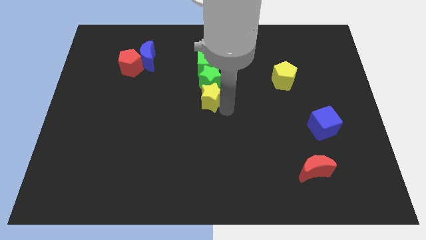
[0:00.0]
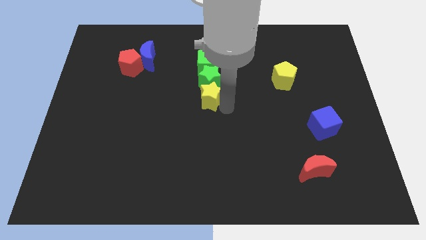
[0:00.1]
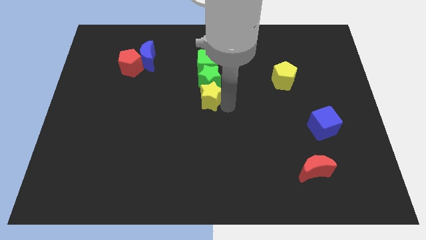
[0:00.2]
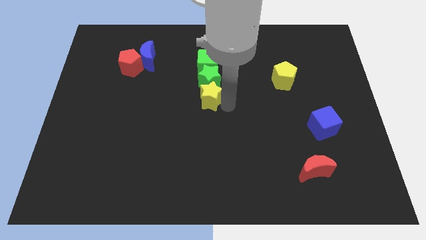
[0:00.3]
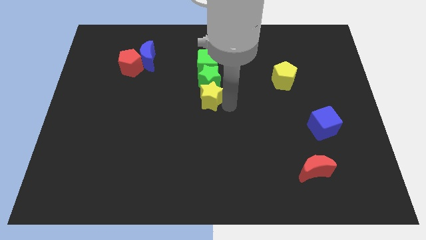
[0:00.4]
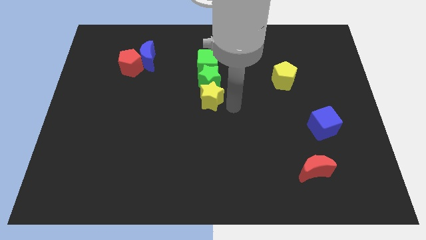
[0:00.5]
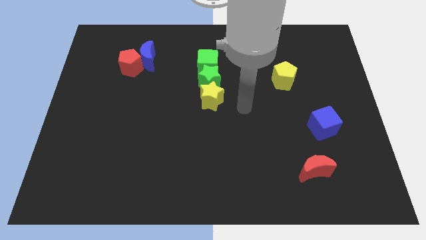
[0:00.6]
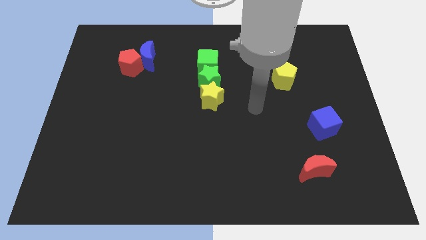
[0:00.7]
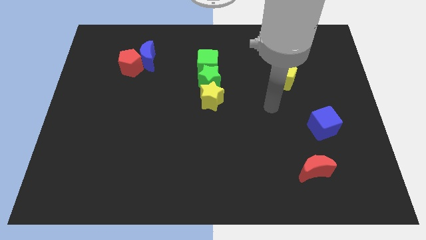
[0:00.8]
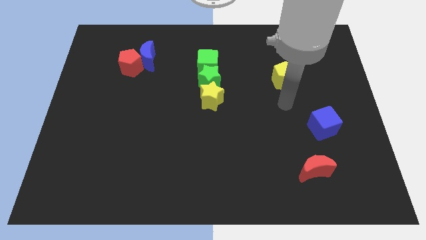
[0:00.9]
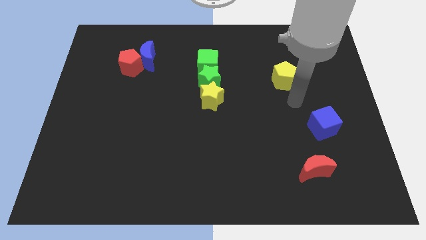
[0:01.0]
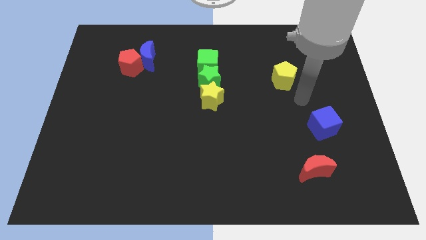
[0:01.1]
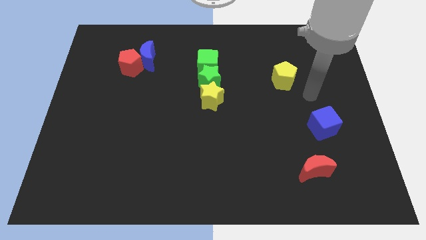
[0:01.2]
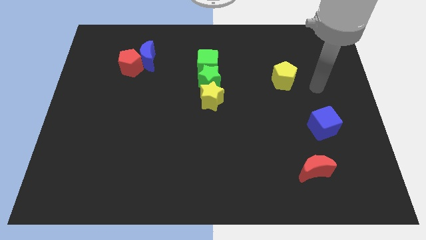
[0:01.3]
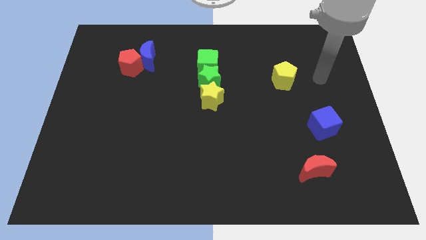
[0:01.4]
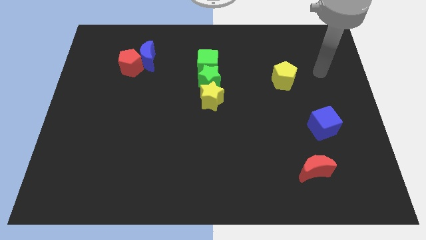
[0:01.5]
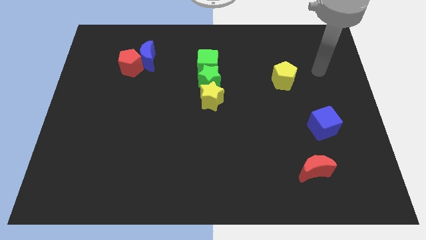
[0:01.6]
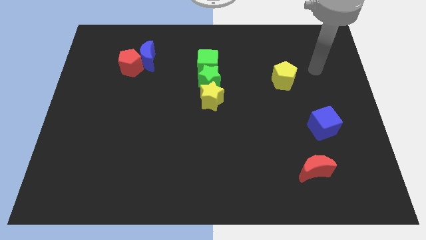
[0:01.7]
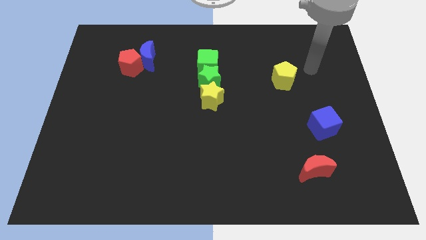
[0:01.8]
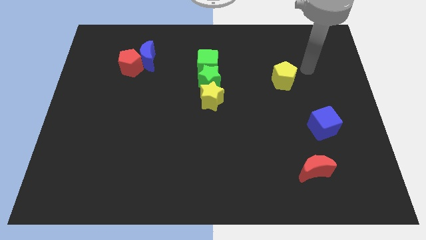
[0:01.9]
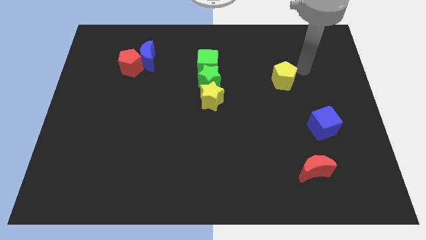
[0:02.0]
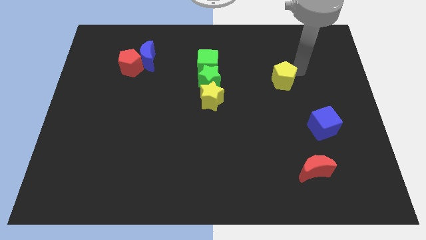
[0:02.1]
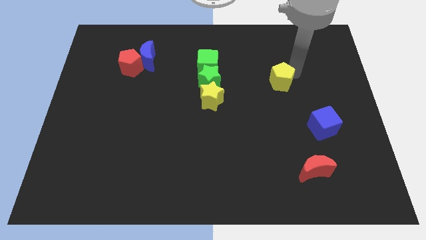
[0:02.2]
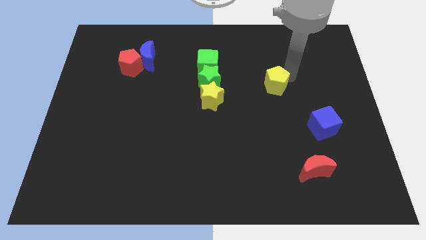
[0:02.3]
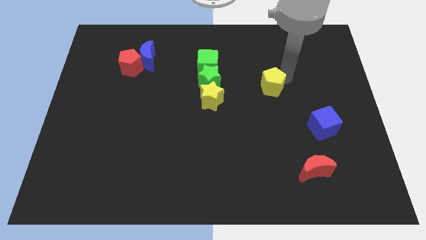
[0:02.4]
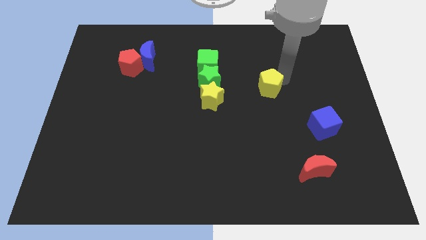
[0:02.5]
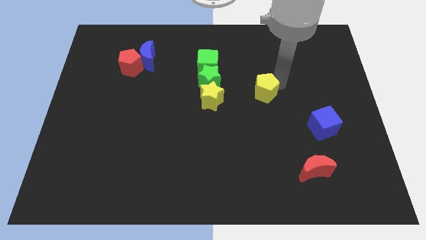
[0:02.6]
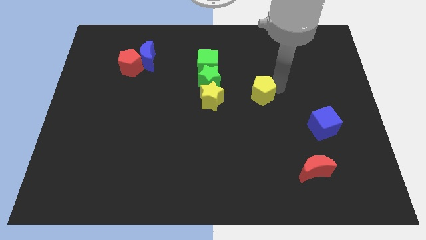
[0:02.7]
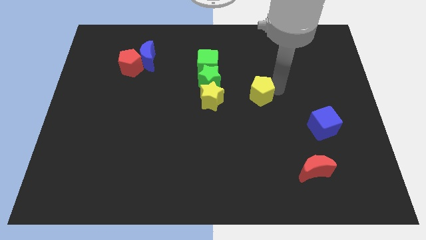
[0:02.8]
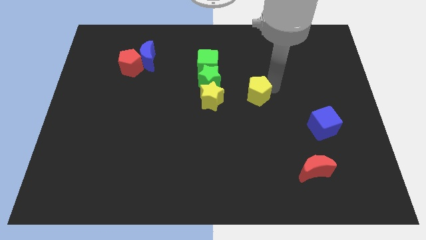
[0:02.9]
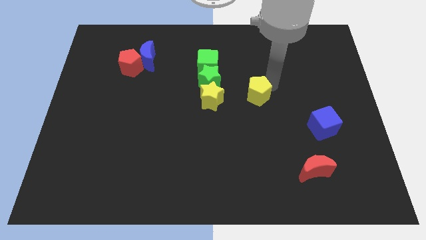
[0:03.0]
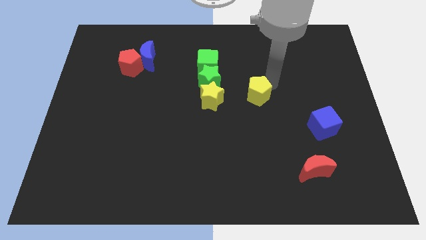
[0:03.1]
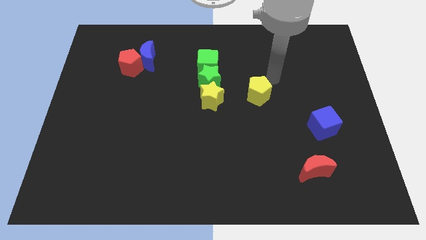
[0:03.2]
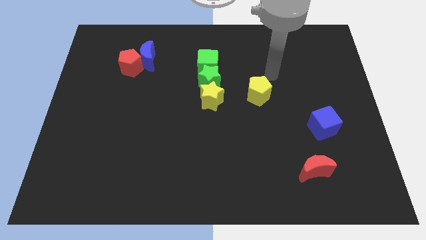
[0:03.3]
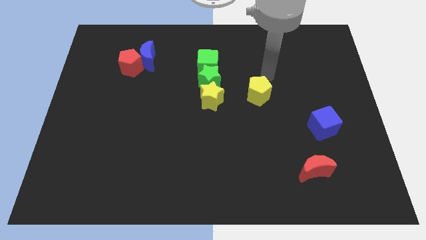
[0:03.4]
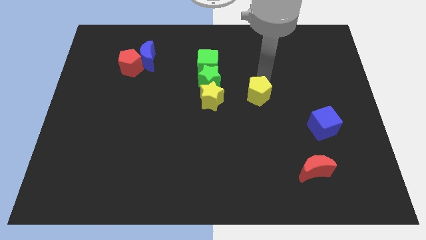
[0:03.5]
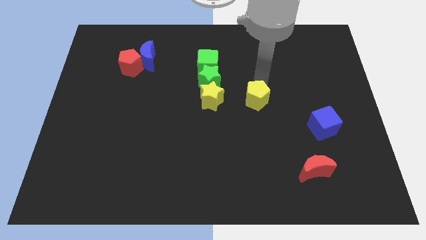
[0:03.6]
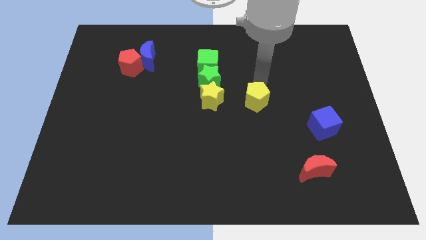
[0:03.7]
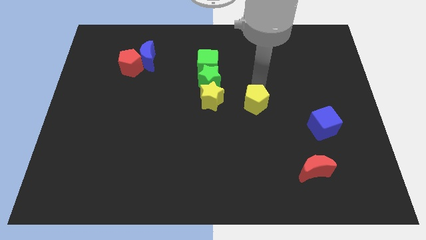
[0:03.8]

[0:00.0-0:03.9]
place the yellow pentagon horizontally to the right side of the yellow star

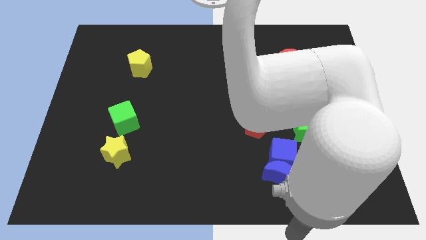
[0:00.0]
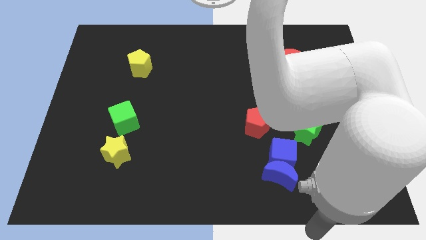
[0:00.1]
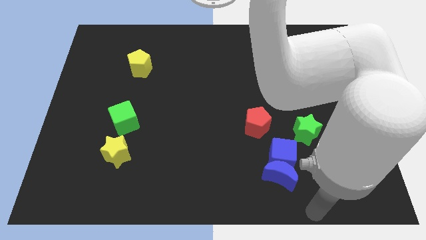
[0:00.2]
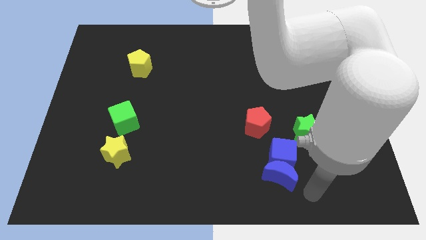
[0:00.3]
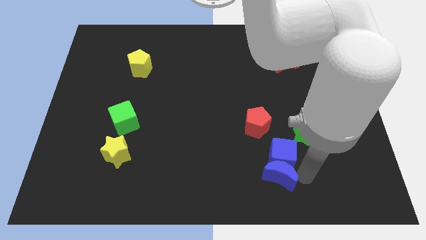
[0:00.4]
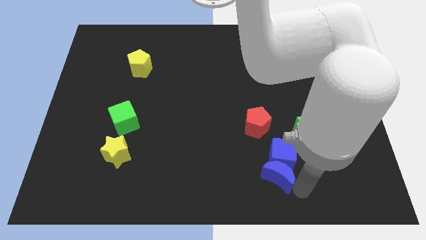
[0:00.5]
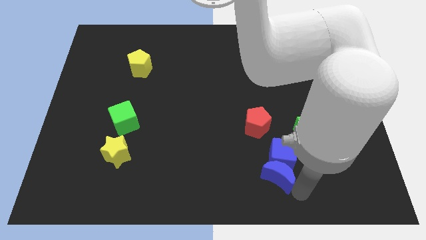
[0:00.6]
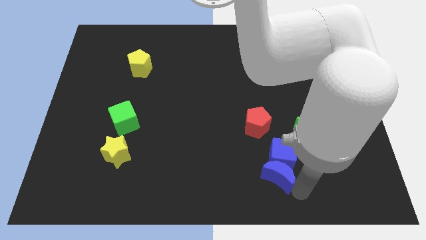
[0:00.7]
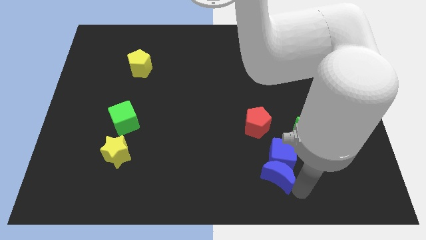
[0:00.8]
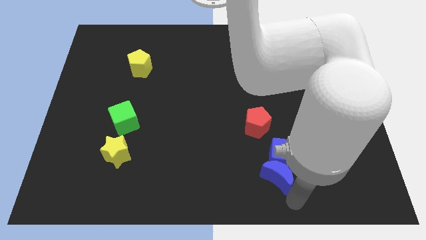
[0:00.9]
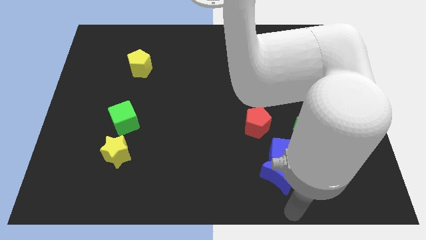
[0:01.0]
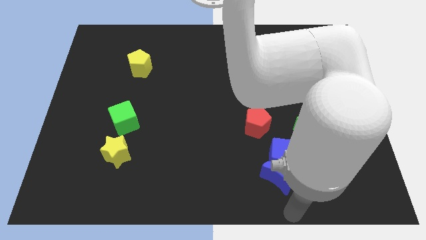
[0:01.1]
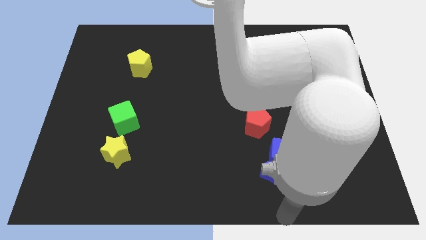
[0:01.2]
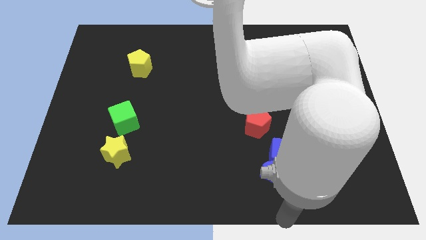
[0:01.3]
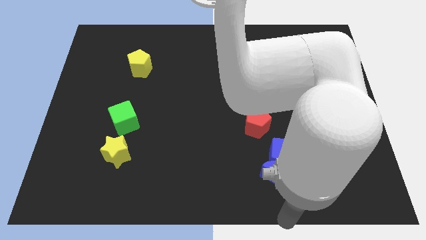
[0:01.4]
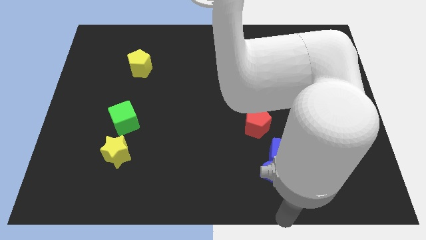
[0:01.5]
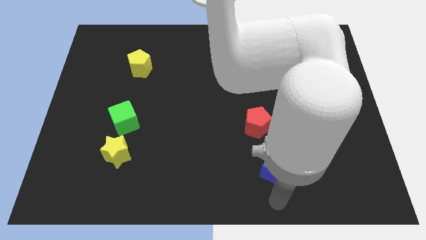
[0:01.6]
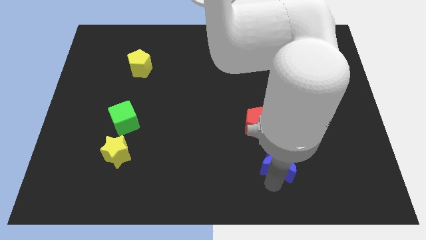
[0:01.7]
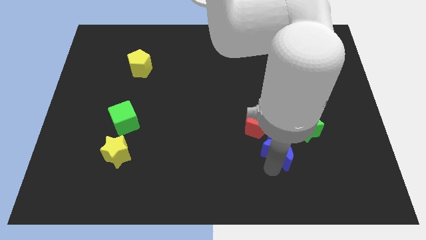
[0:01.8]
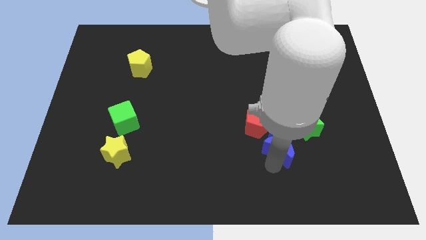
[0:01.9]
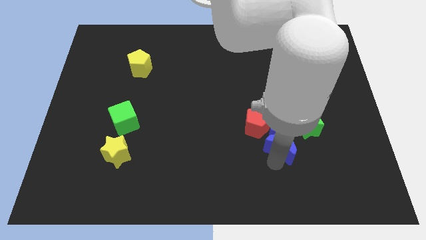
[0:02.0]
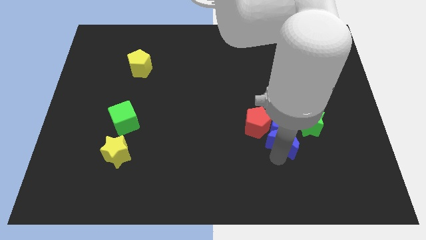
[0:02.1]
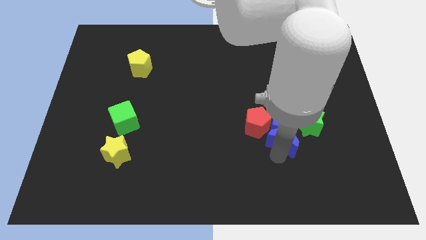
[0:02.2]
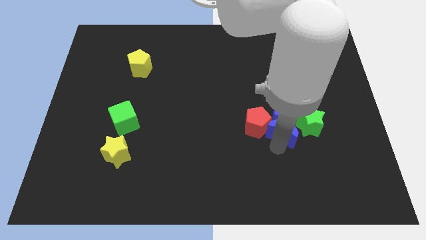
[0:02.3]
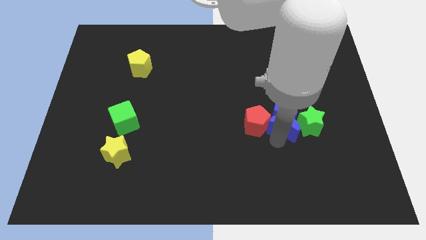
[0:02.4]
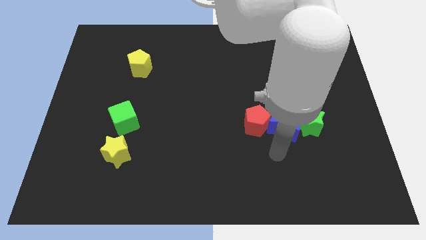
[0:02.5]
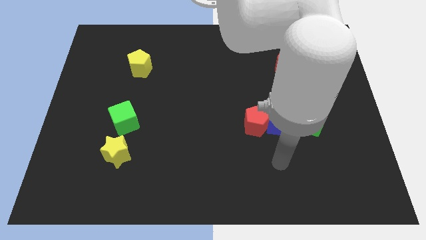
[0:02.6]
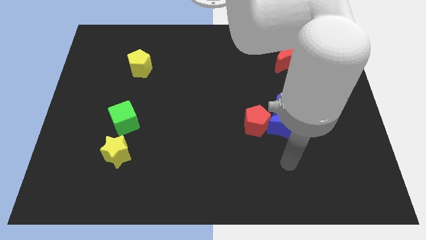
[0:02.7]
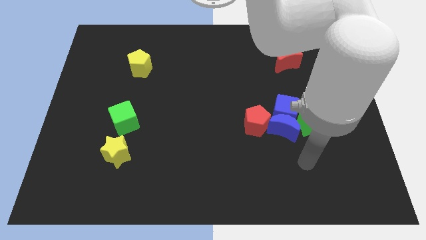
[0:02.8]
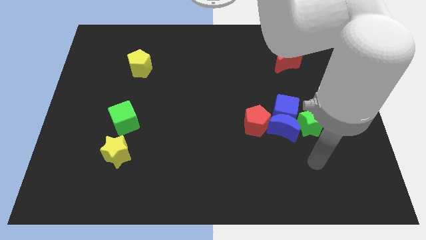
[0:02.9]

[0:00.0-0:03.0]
move the blue blocks up

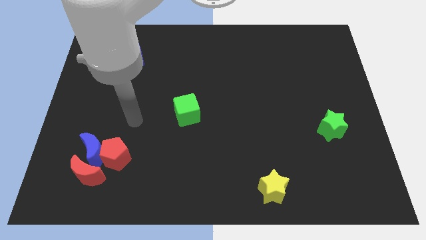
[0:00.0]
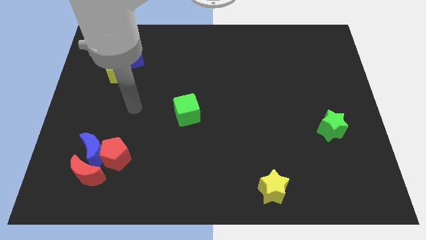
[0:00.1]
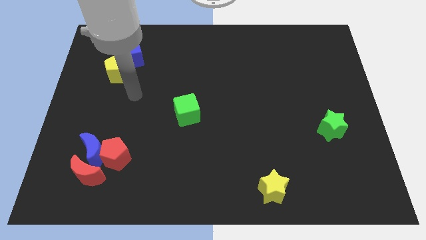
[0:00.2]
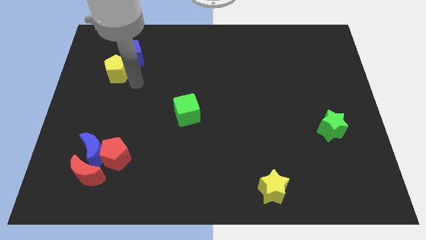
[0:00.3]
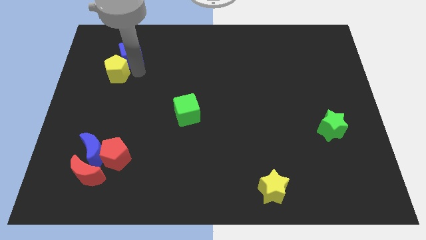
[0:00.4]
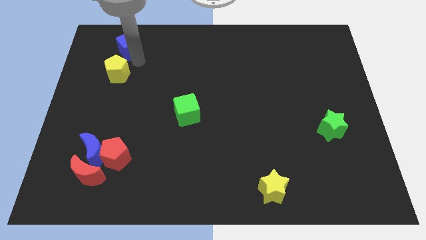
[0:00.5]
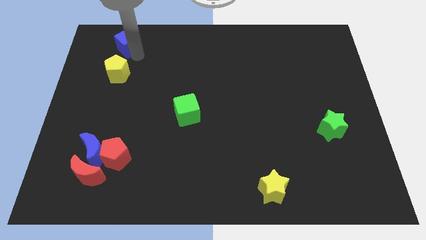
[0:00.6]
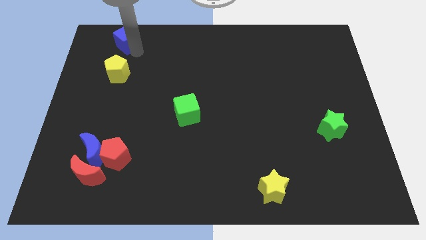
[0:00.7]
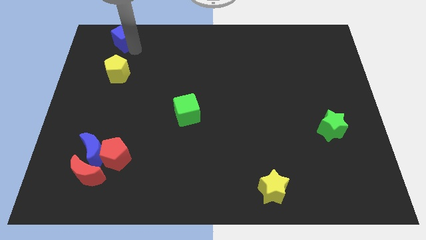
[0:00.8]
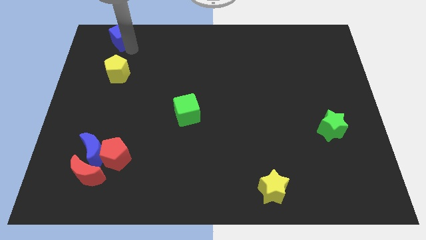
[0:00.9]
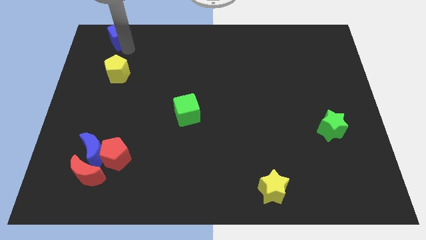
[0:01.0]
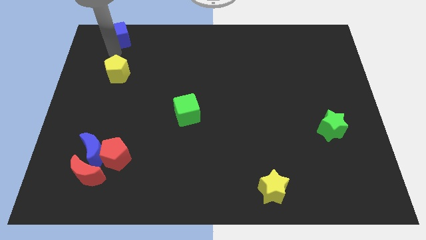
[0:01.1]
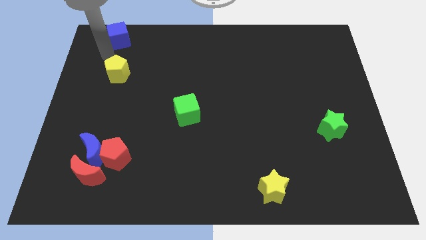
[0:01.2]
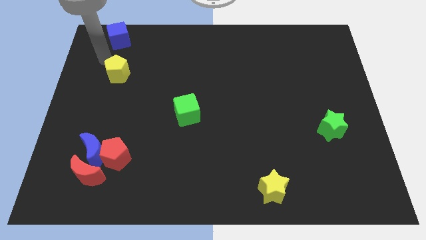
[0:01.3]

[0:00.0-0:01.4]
separate the blue cube from the yellow pentagon

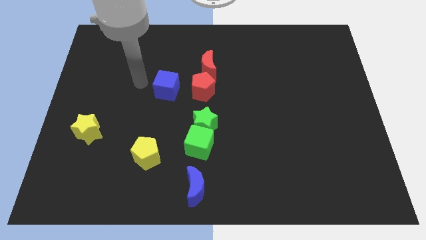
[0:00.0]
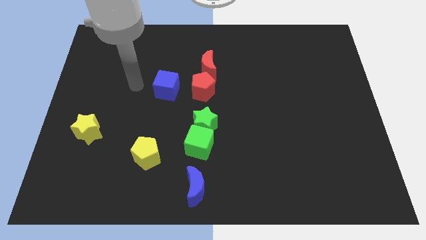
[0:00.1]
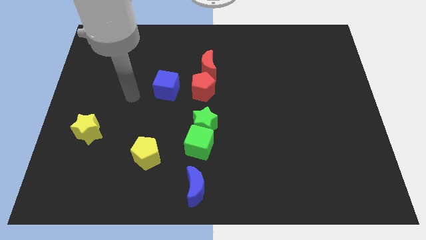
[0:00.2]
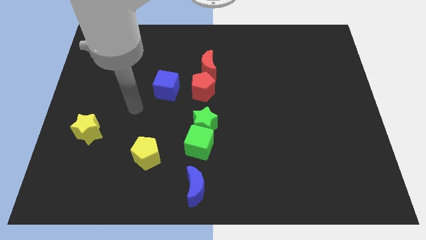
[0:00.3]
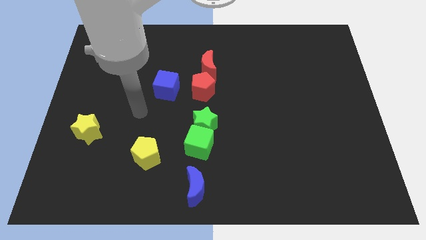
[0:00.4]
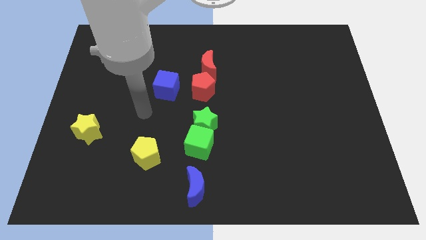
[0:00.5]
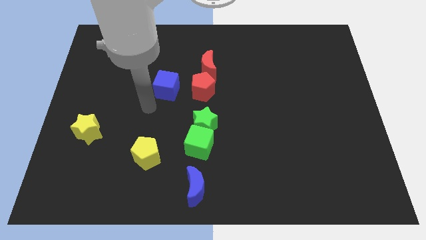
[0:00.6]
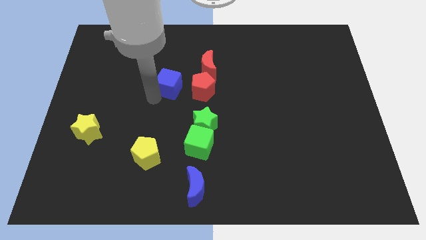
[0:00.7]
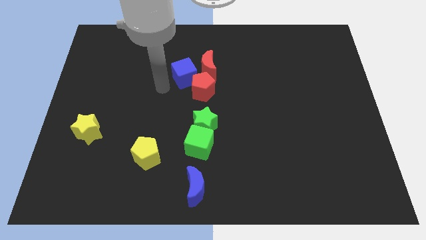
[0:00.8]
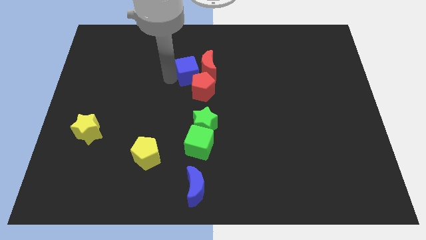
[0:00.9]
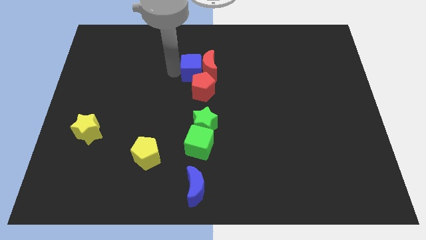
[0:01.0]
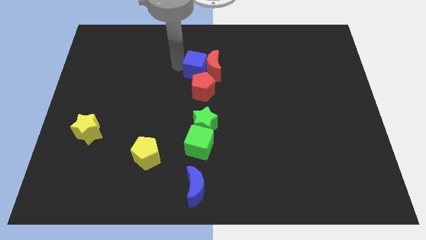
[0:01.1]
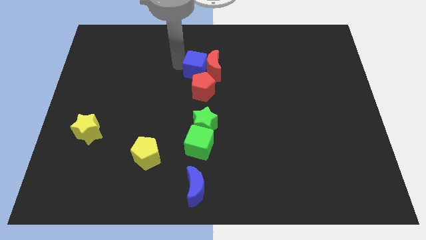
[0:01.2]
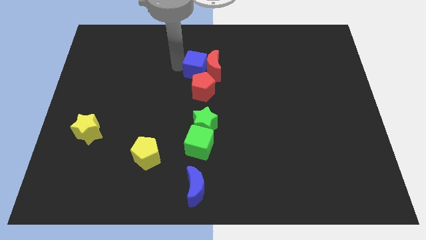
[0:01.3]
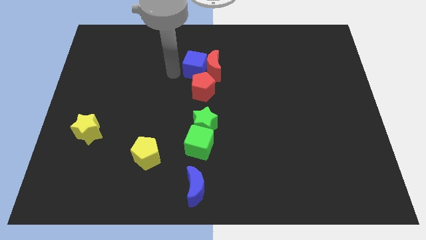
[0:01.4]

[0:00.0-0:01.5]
push blue cube into the red pentagon
